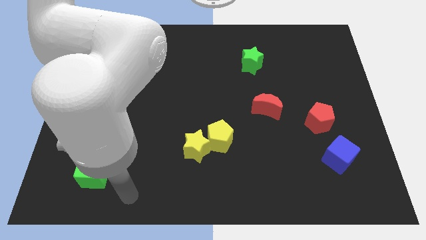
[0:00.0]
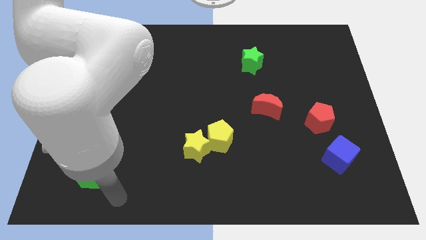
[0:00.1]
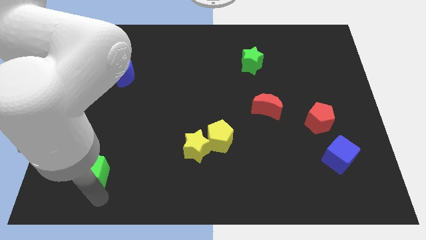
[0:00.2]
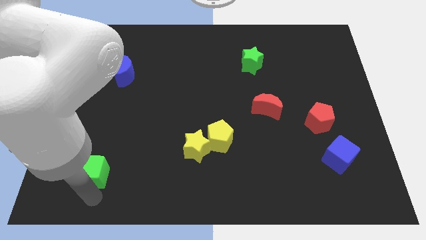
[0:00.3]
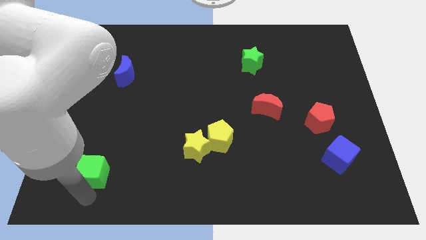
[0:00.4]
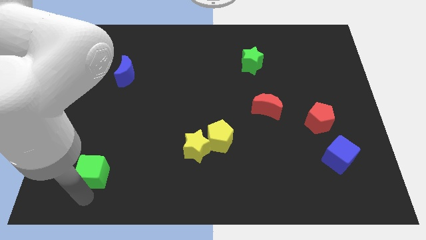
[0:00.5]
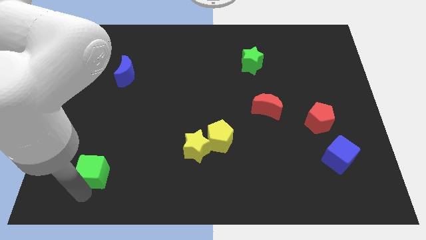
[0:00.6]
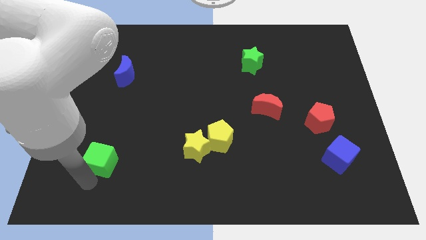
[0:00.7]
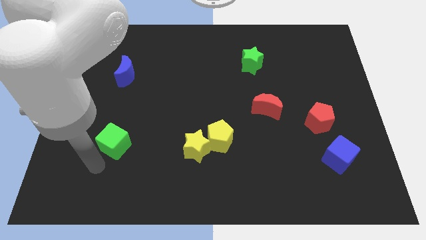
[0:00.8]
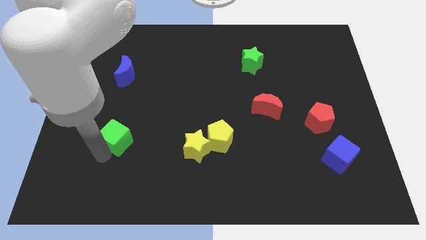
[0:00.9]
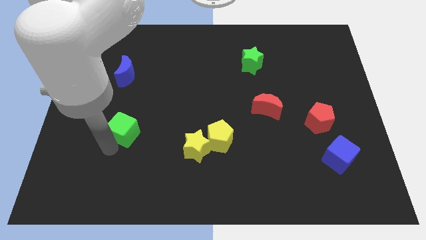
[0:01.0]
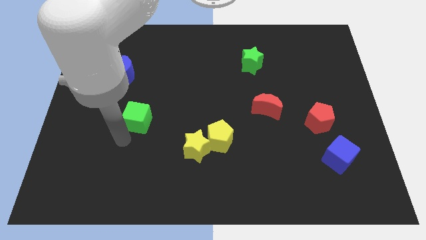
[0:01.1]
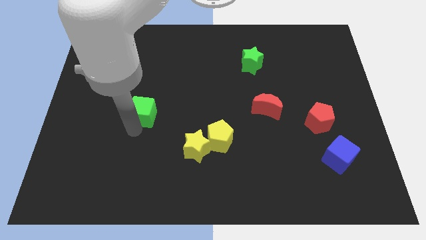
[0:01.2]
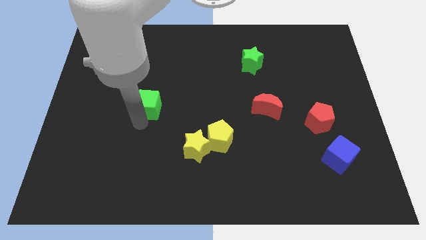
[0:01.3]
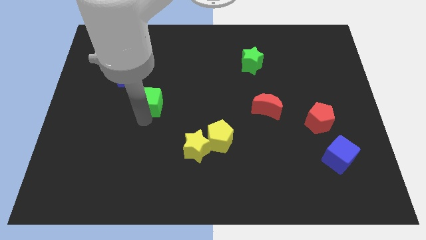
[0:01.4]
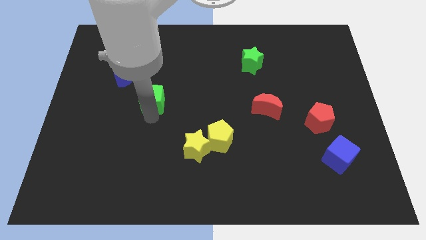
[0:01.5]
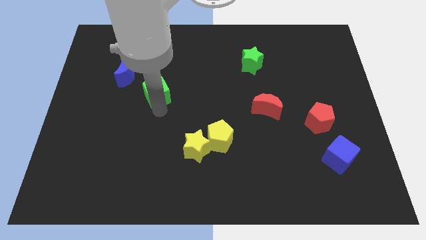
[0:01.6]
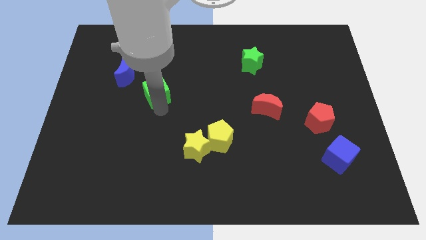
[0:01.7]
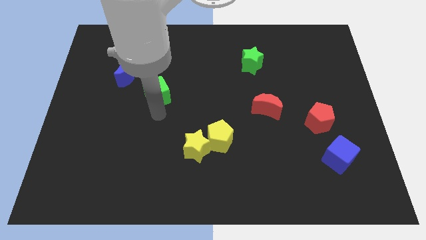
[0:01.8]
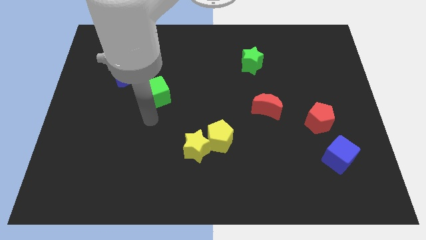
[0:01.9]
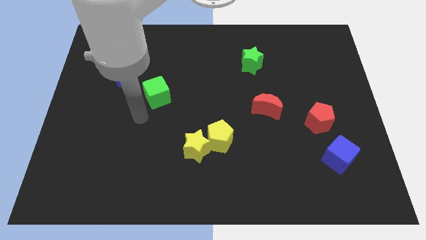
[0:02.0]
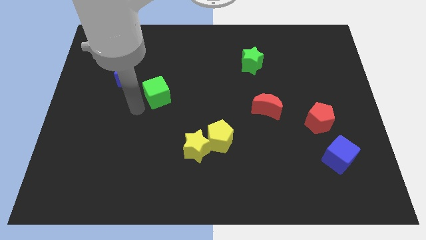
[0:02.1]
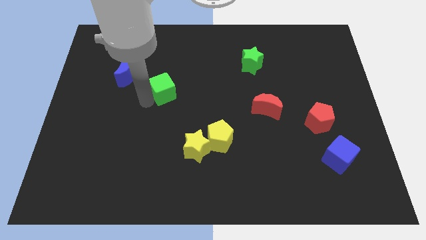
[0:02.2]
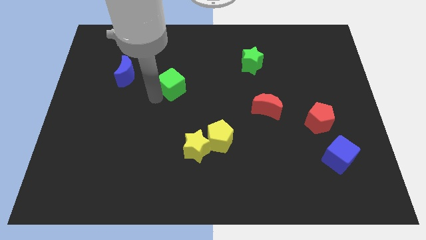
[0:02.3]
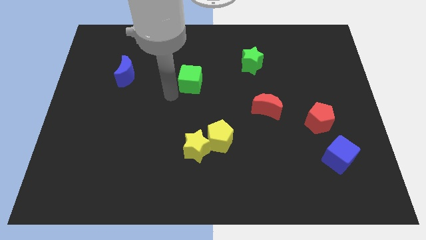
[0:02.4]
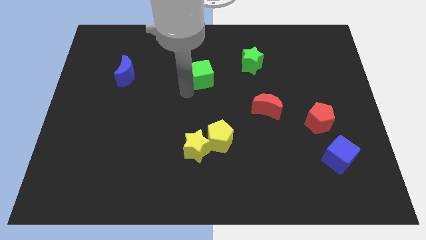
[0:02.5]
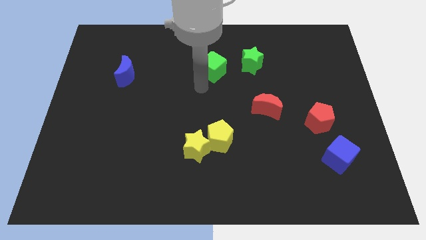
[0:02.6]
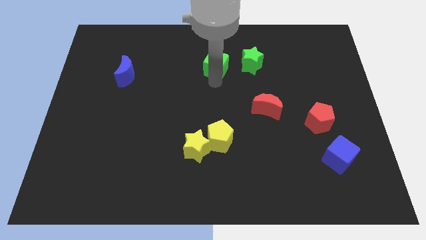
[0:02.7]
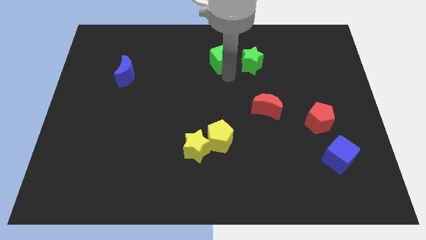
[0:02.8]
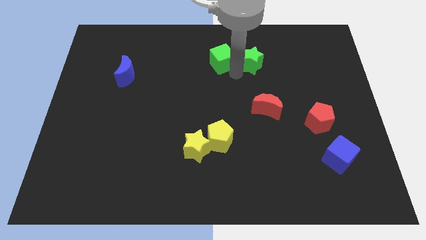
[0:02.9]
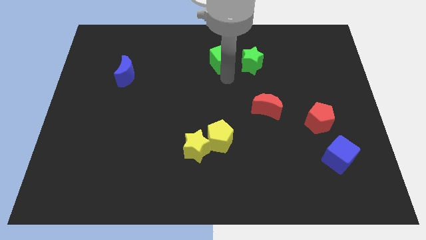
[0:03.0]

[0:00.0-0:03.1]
place green cube to the left of green star

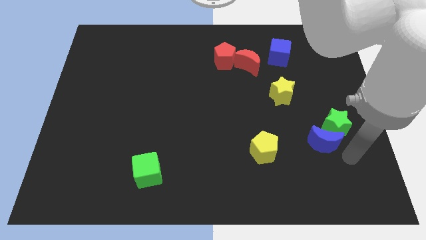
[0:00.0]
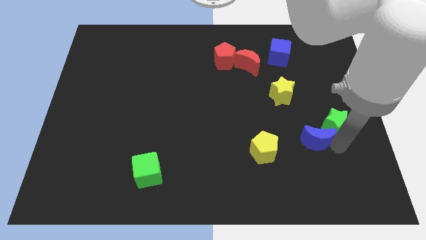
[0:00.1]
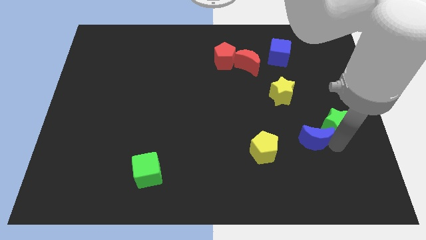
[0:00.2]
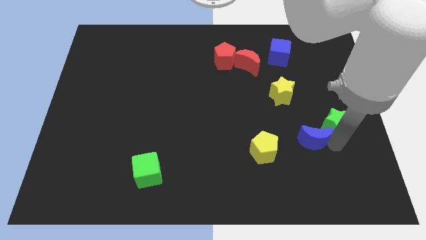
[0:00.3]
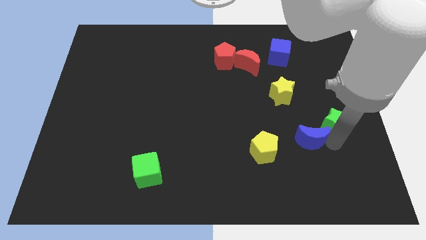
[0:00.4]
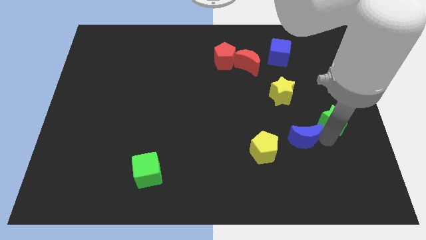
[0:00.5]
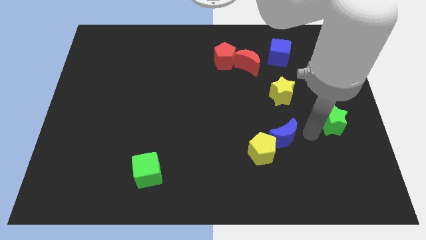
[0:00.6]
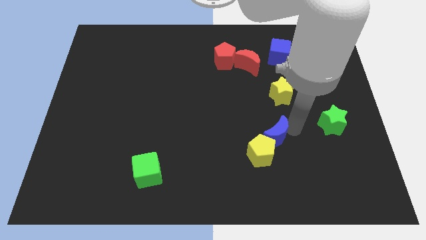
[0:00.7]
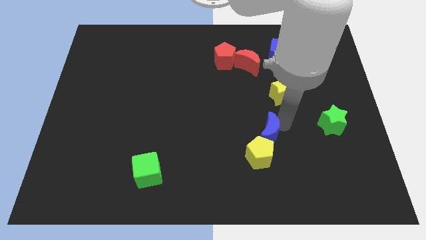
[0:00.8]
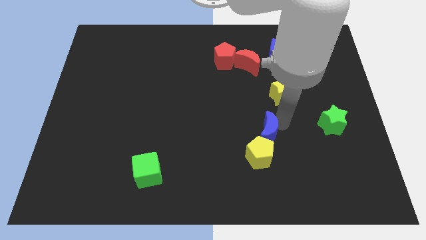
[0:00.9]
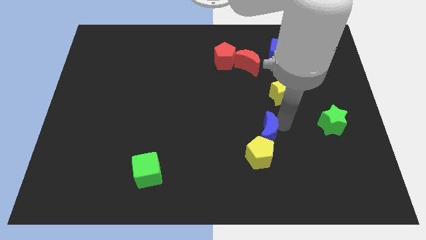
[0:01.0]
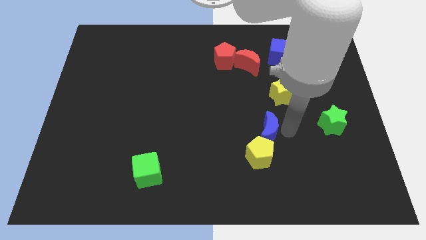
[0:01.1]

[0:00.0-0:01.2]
push the blue crescent to the top of the yellow pentagon

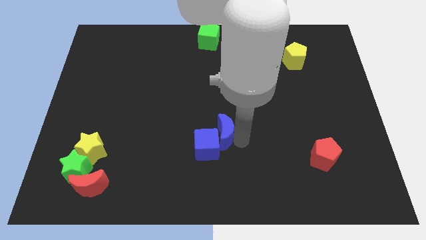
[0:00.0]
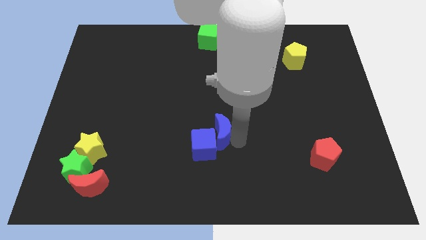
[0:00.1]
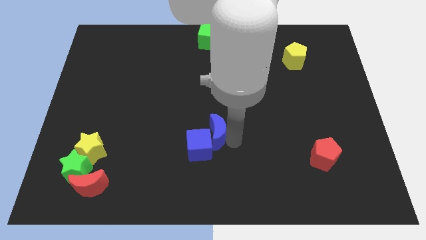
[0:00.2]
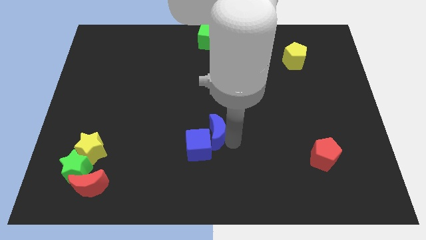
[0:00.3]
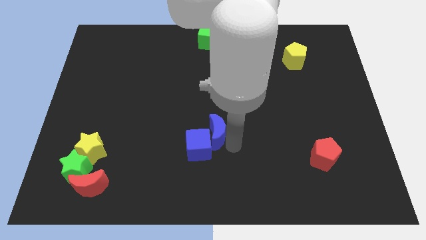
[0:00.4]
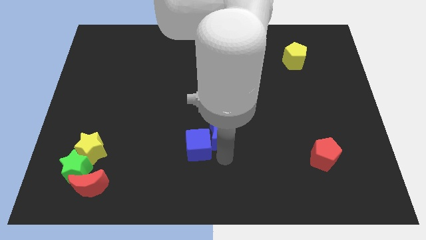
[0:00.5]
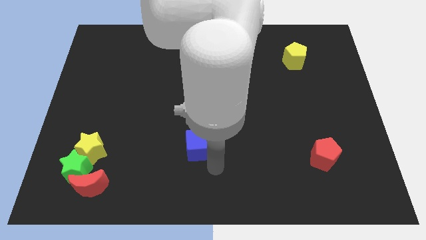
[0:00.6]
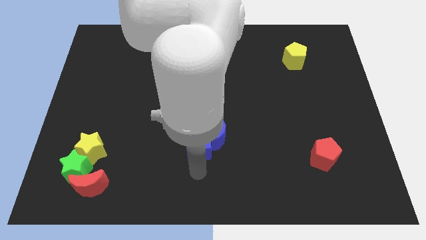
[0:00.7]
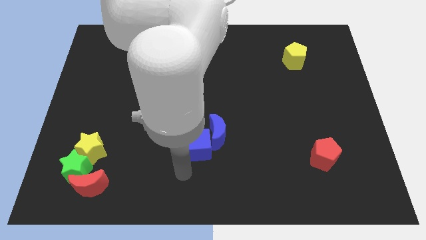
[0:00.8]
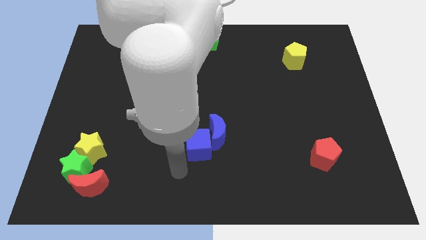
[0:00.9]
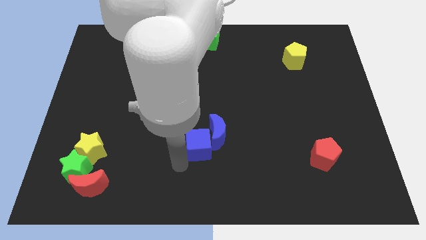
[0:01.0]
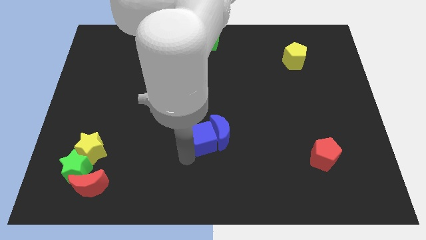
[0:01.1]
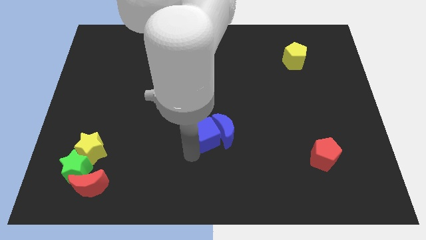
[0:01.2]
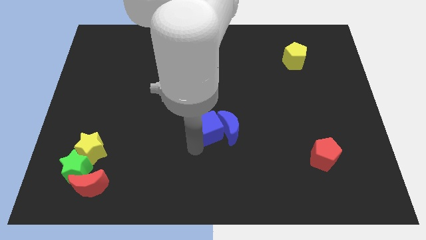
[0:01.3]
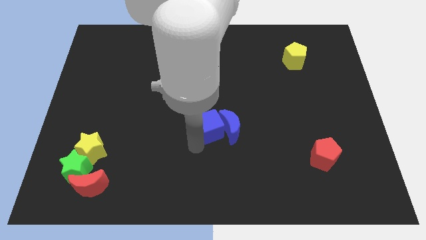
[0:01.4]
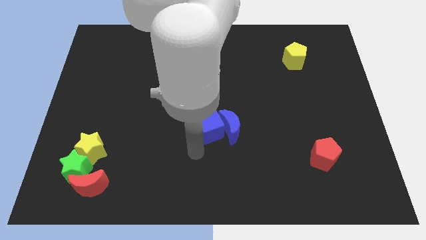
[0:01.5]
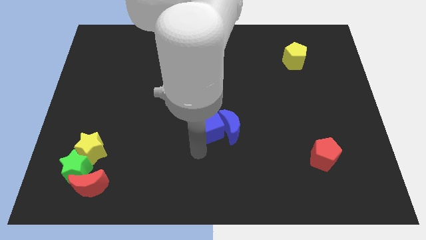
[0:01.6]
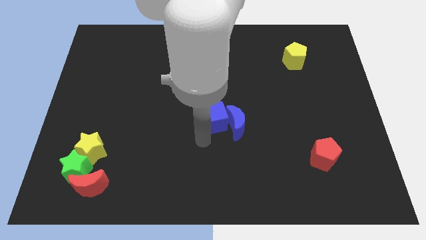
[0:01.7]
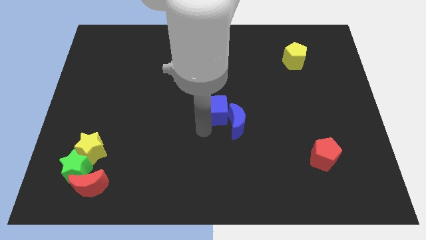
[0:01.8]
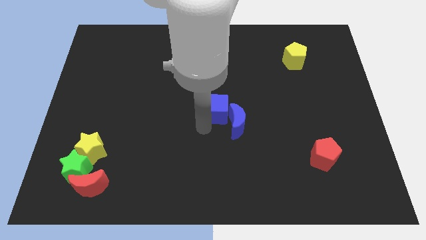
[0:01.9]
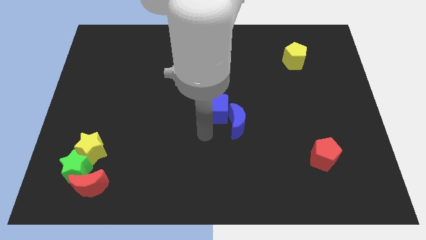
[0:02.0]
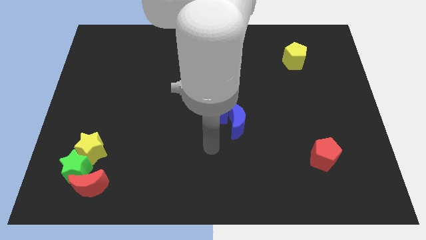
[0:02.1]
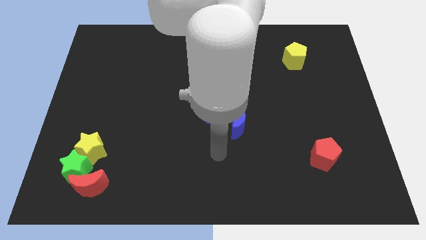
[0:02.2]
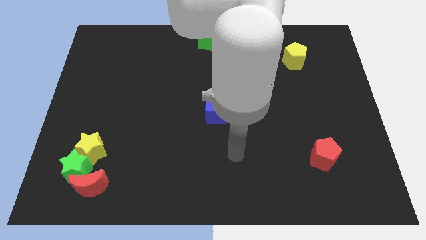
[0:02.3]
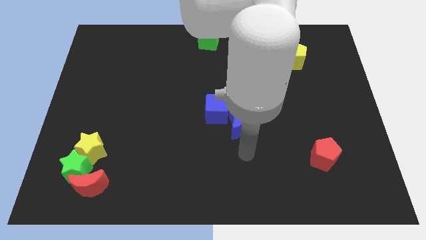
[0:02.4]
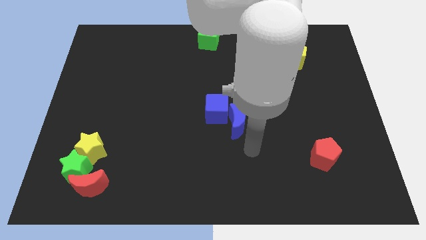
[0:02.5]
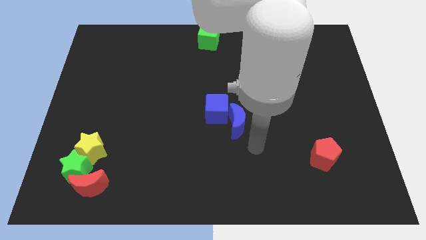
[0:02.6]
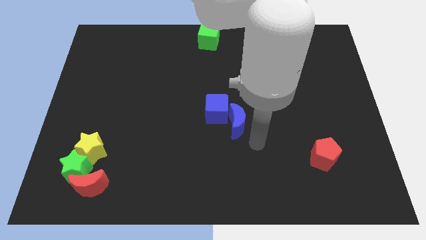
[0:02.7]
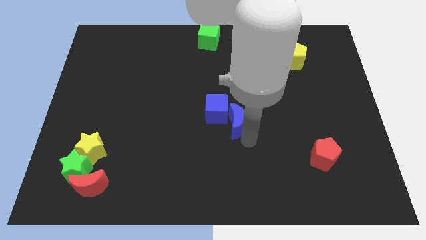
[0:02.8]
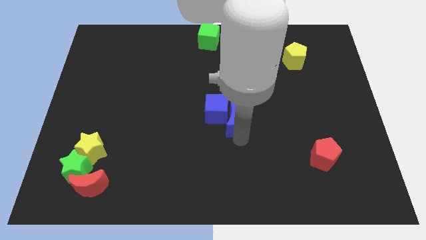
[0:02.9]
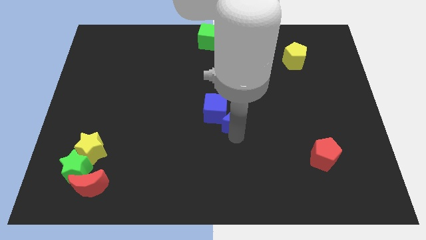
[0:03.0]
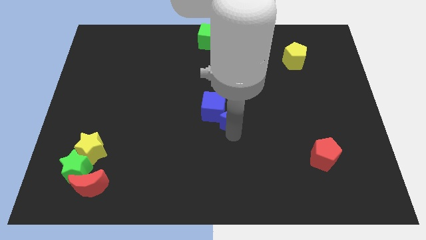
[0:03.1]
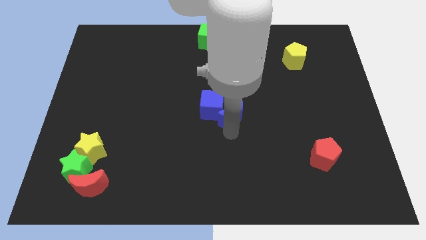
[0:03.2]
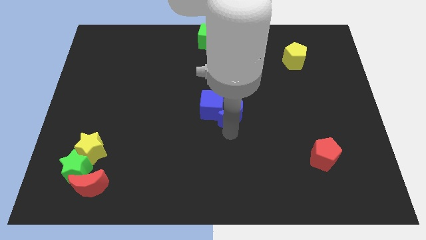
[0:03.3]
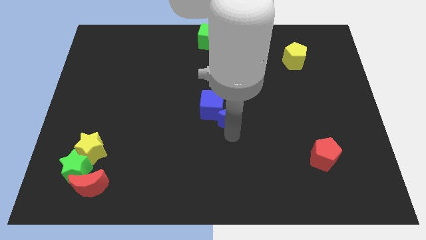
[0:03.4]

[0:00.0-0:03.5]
adjust the blue blocks at the center of the board

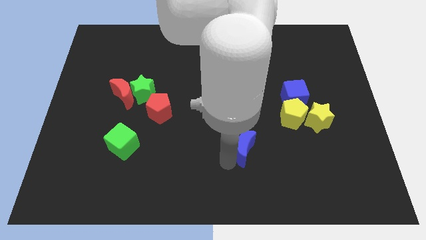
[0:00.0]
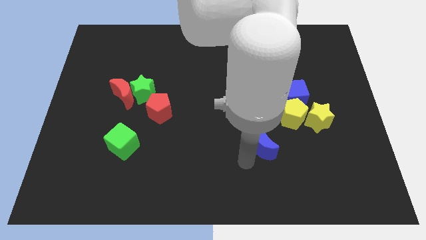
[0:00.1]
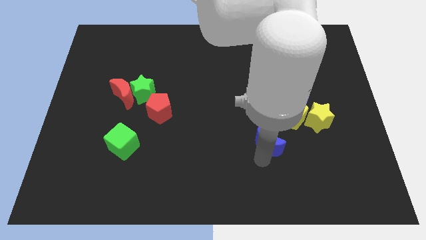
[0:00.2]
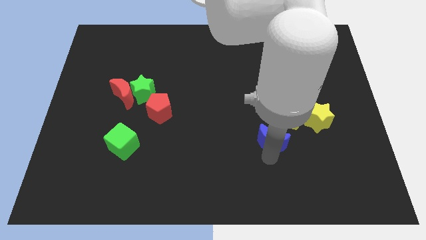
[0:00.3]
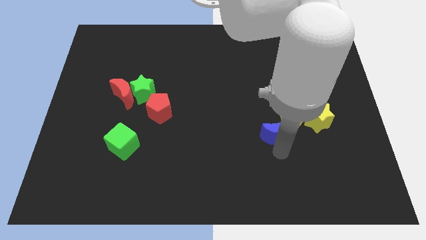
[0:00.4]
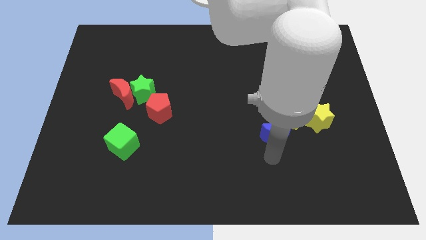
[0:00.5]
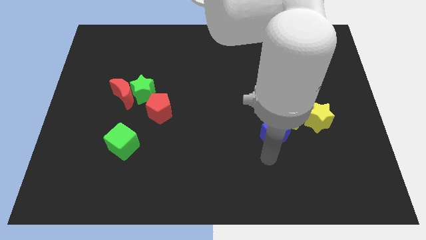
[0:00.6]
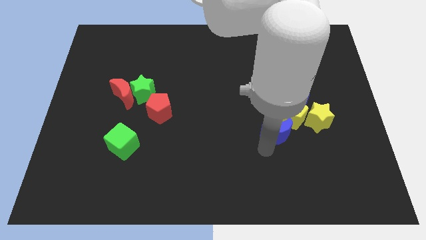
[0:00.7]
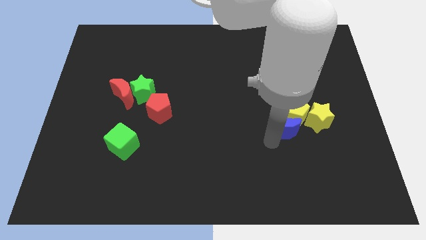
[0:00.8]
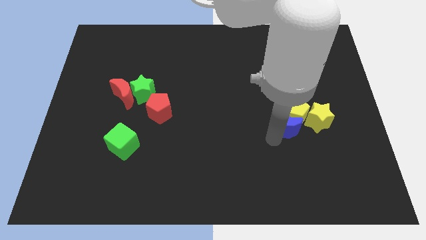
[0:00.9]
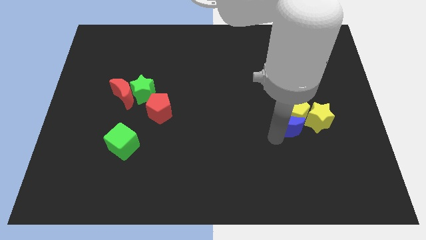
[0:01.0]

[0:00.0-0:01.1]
place the blue moon under the yellow pentagon

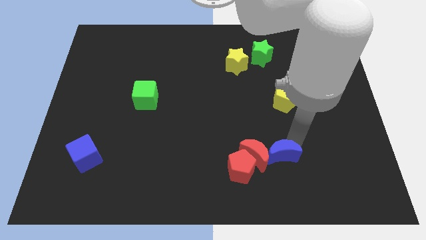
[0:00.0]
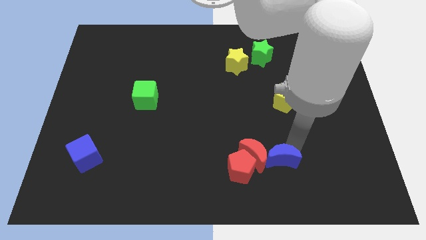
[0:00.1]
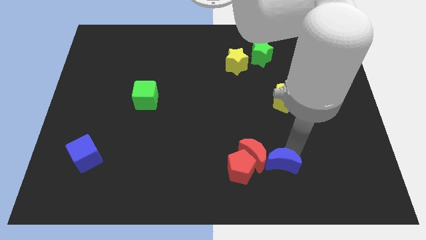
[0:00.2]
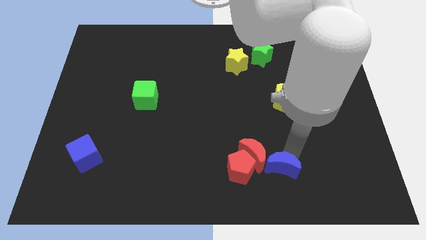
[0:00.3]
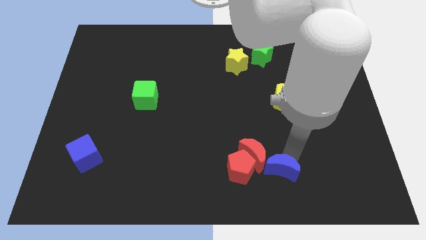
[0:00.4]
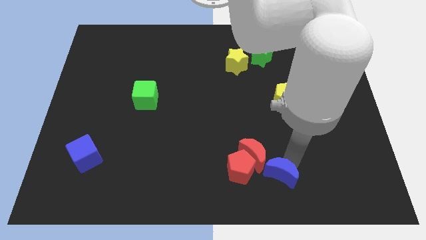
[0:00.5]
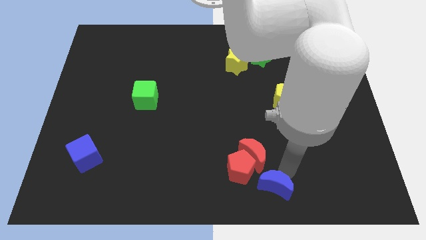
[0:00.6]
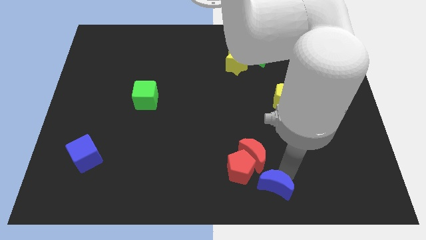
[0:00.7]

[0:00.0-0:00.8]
place the blue crescent towards the bottom right side of the red pentagon
